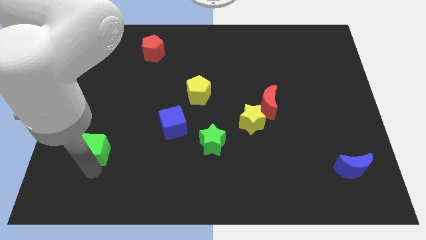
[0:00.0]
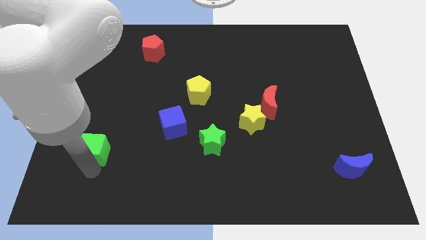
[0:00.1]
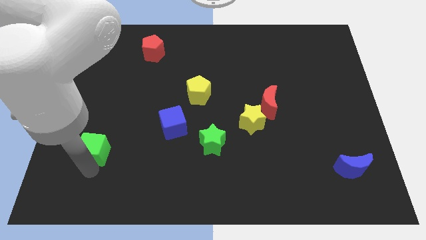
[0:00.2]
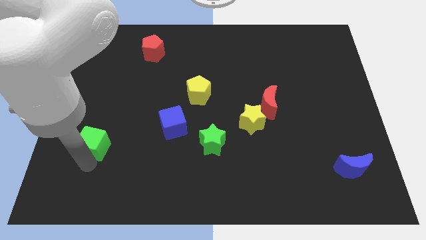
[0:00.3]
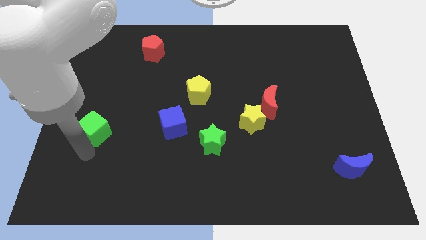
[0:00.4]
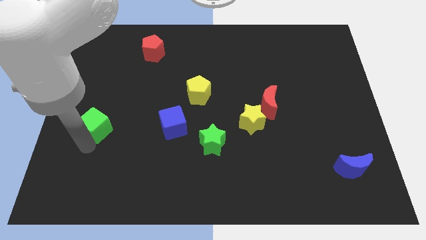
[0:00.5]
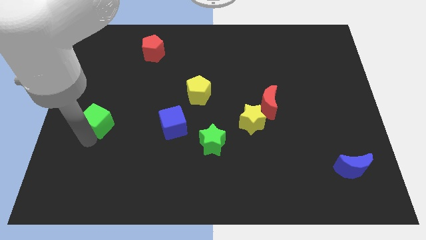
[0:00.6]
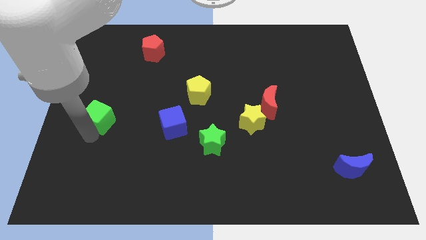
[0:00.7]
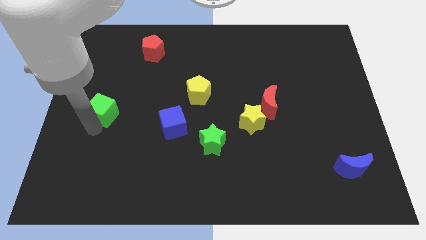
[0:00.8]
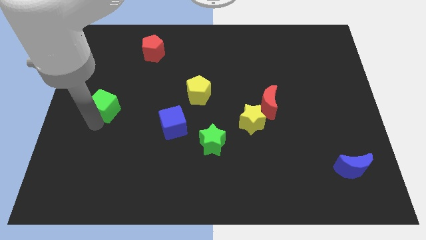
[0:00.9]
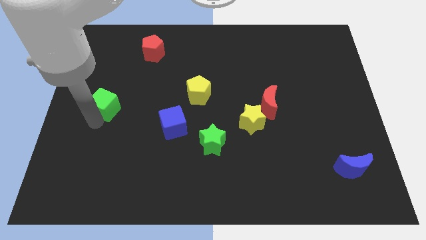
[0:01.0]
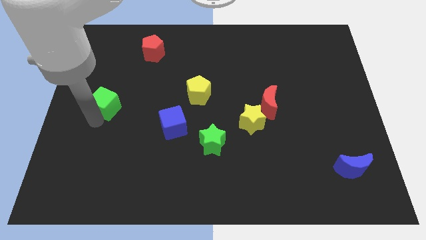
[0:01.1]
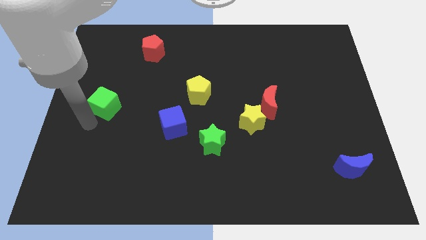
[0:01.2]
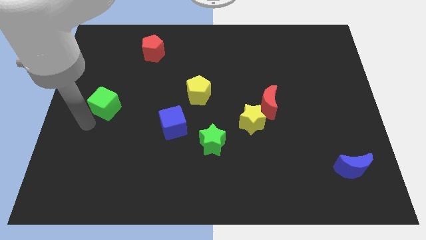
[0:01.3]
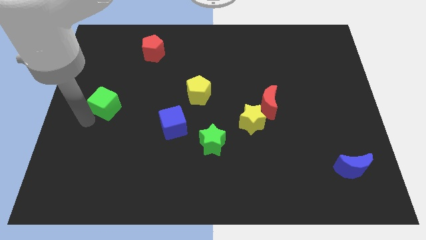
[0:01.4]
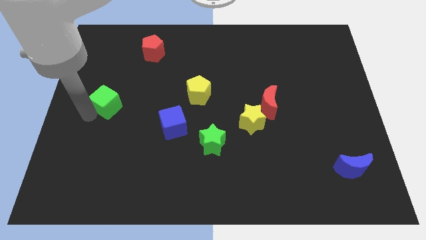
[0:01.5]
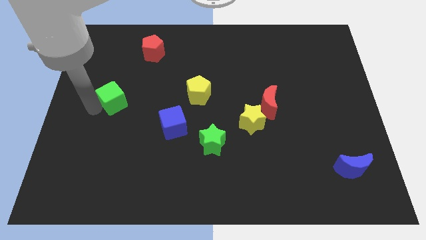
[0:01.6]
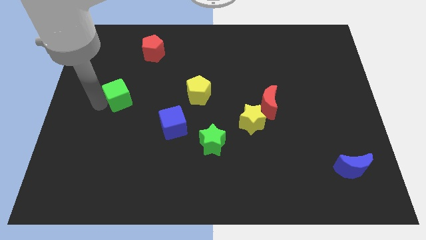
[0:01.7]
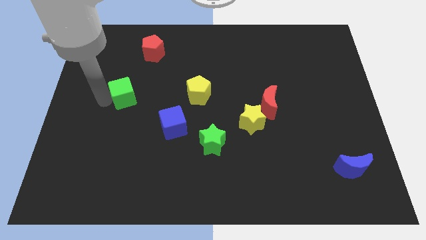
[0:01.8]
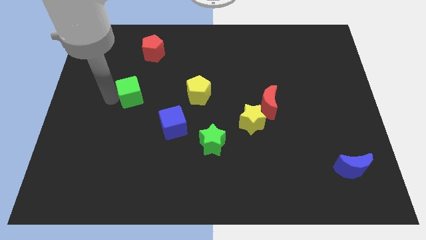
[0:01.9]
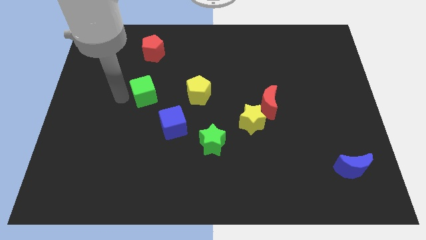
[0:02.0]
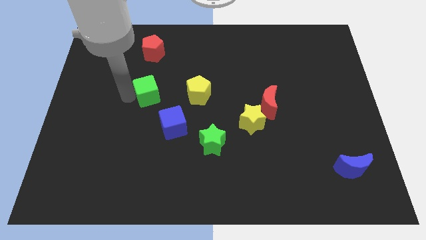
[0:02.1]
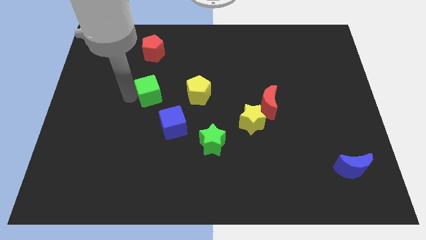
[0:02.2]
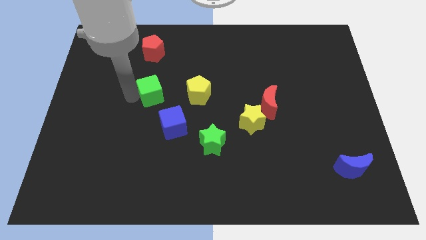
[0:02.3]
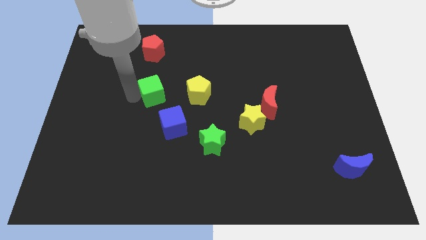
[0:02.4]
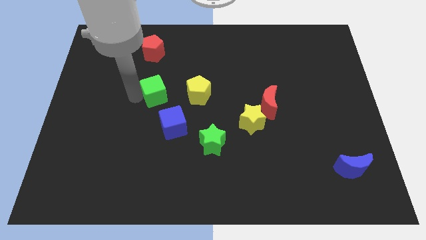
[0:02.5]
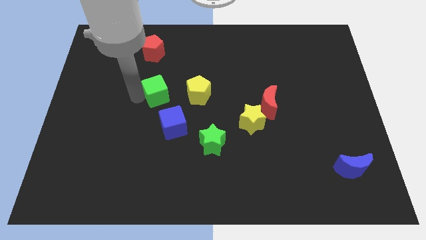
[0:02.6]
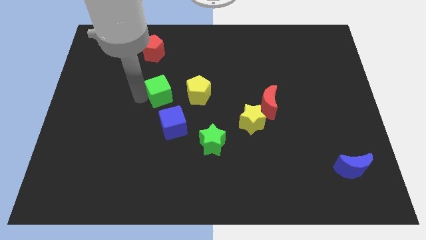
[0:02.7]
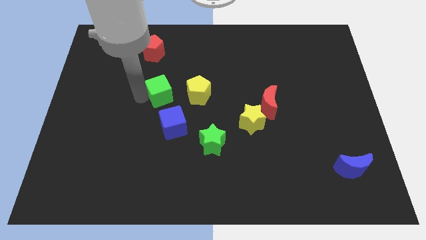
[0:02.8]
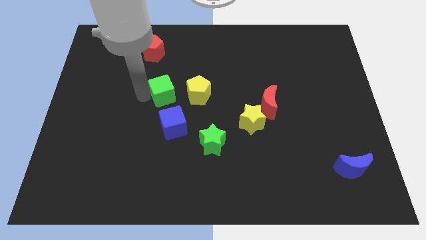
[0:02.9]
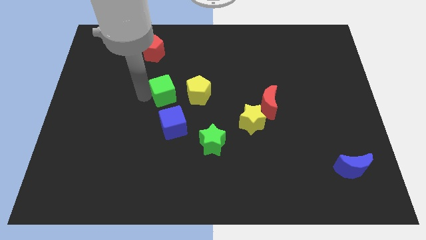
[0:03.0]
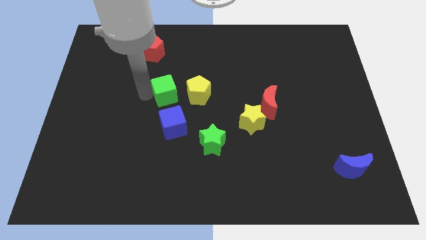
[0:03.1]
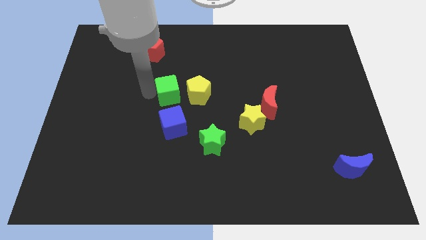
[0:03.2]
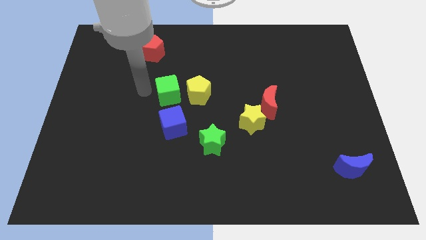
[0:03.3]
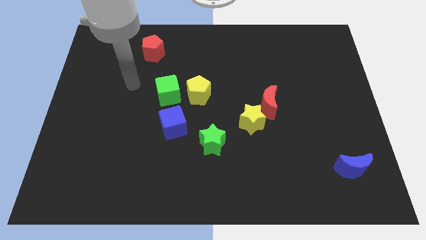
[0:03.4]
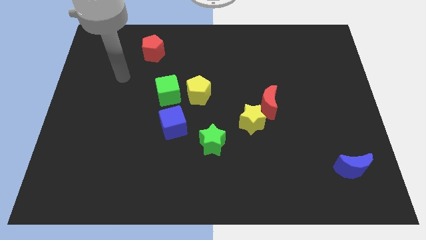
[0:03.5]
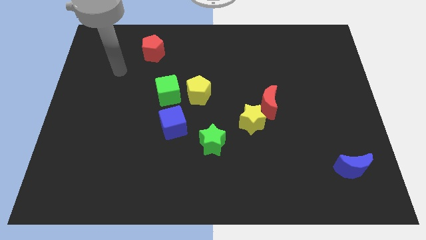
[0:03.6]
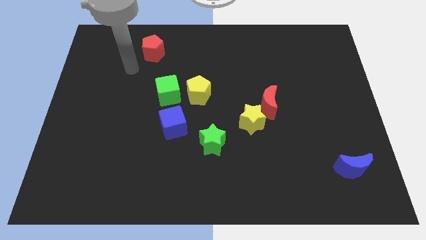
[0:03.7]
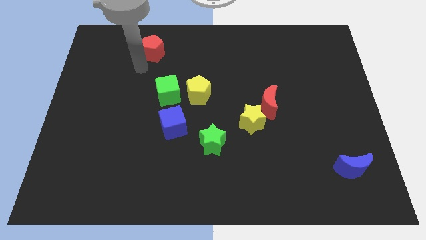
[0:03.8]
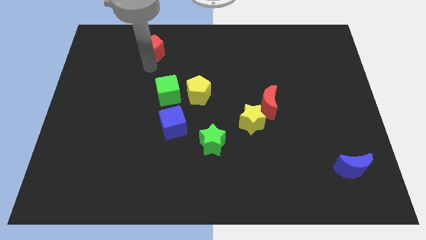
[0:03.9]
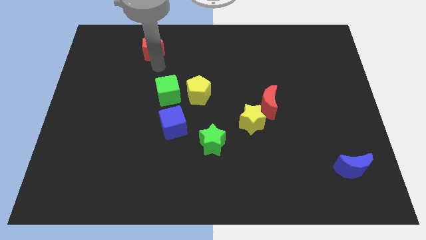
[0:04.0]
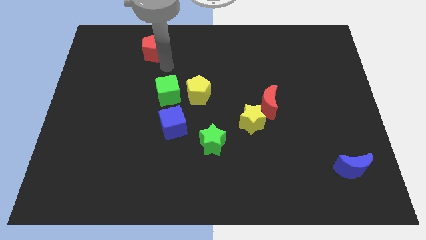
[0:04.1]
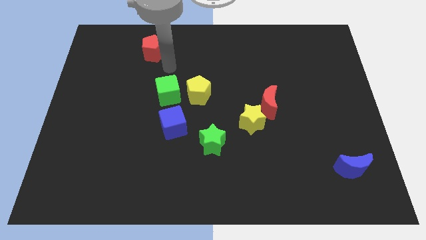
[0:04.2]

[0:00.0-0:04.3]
move the green cube left to the yellow pentagon

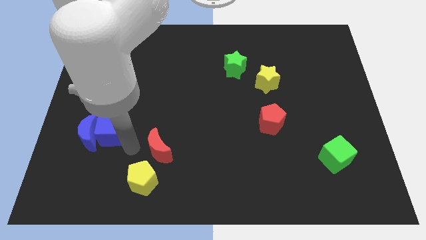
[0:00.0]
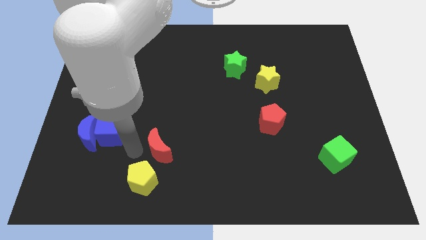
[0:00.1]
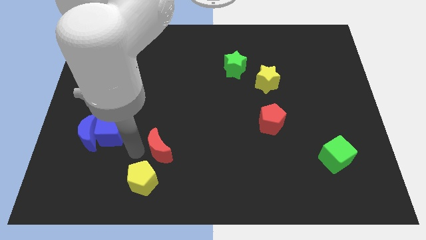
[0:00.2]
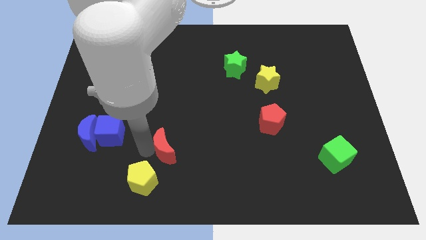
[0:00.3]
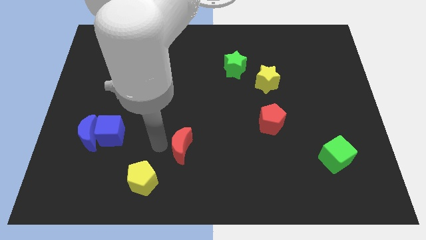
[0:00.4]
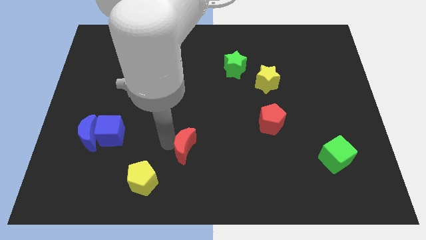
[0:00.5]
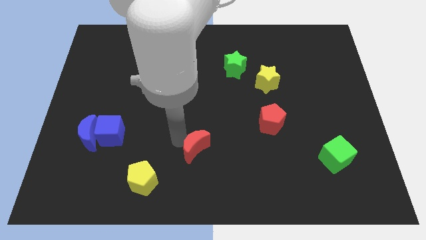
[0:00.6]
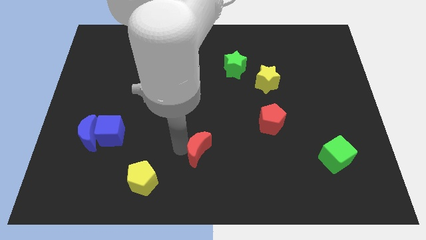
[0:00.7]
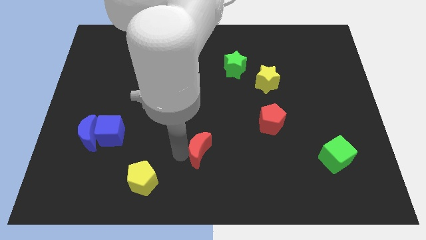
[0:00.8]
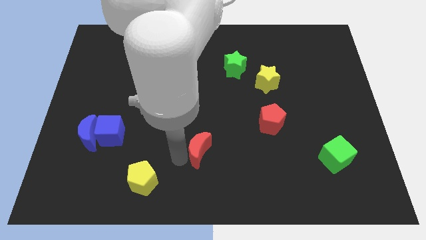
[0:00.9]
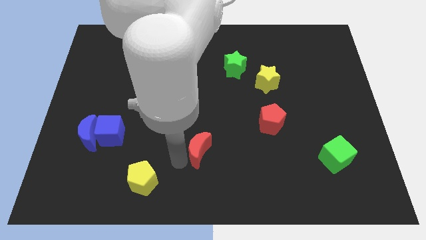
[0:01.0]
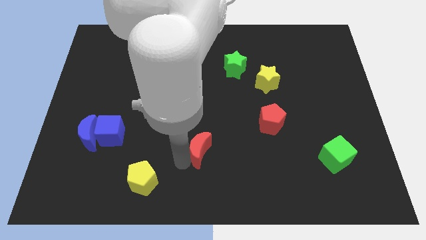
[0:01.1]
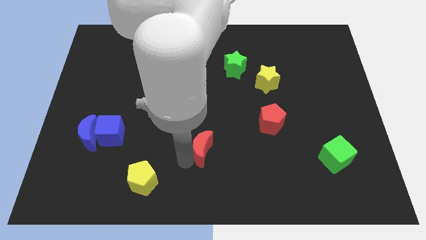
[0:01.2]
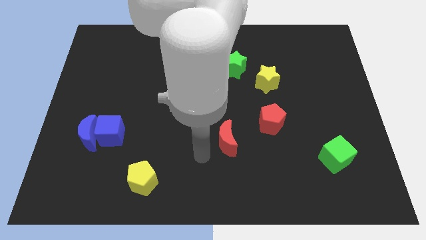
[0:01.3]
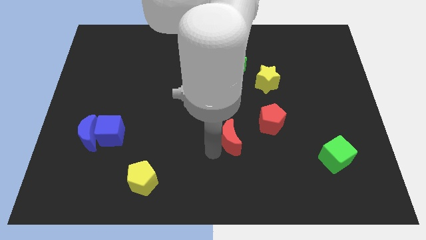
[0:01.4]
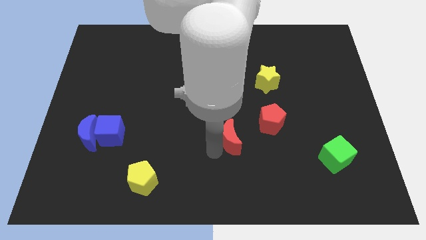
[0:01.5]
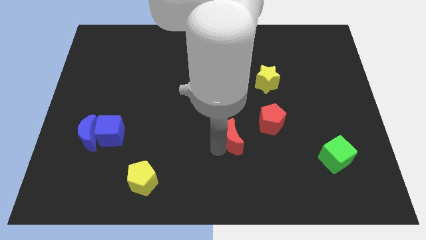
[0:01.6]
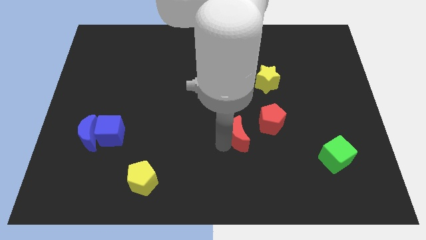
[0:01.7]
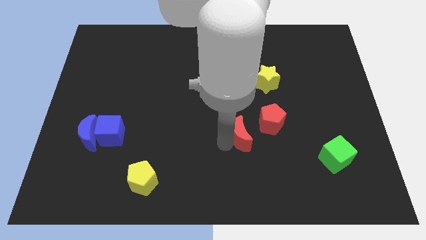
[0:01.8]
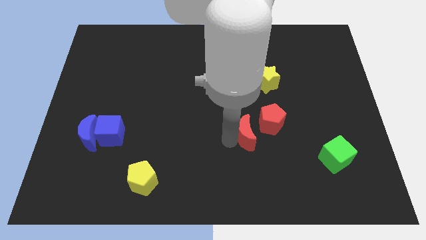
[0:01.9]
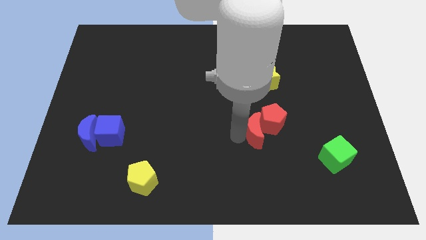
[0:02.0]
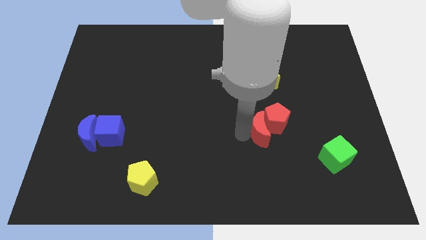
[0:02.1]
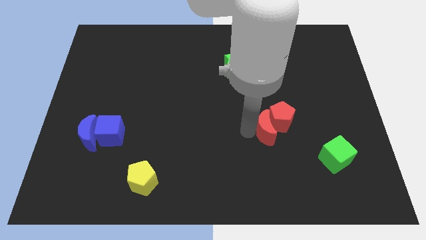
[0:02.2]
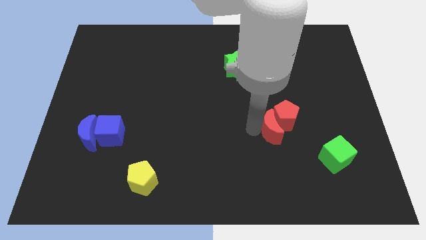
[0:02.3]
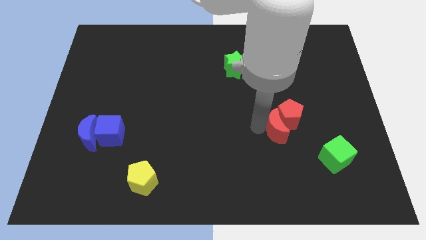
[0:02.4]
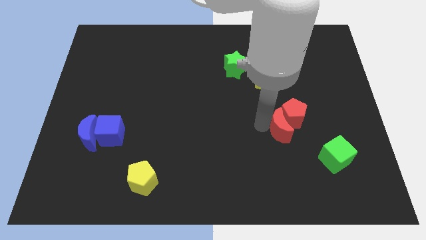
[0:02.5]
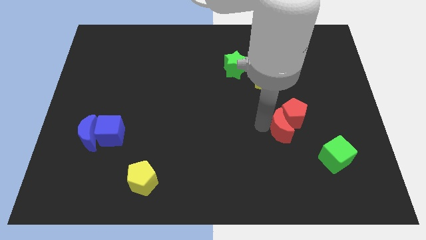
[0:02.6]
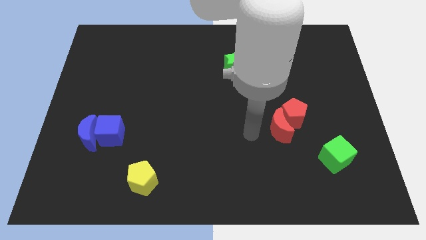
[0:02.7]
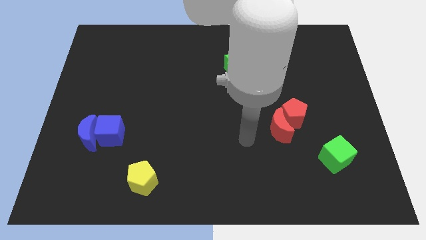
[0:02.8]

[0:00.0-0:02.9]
move the red crescent into the red pentagon

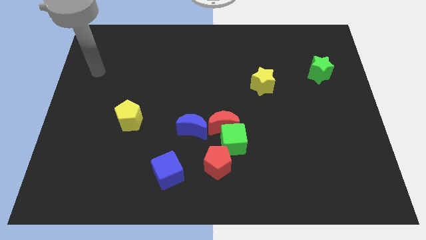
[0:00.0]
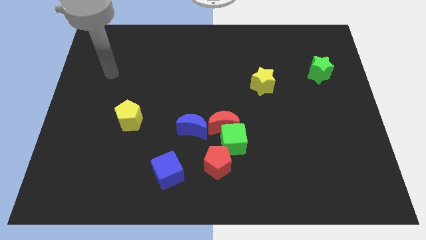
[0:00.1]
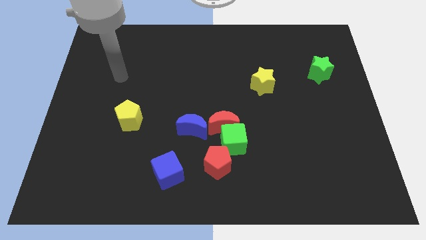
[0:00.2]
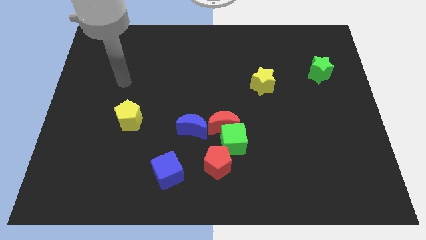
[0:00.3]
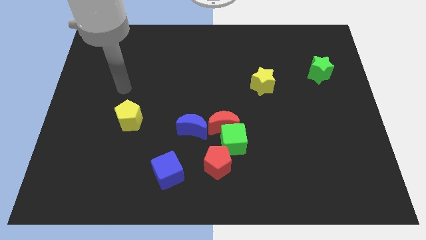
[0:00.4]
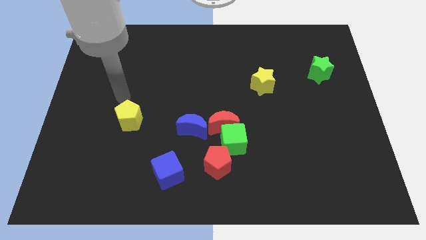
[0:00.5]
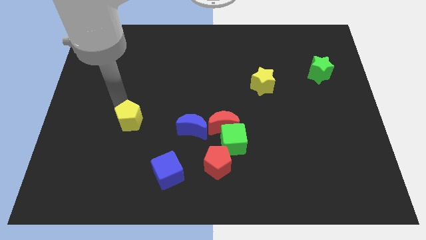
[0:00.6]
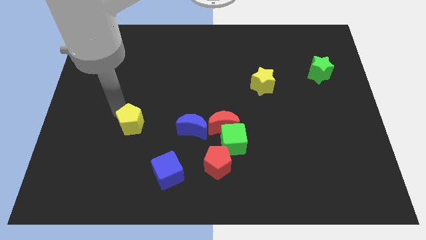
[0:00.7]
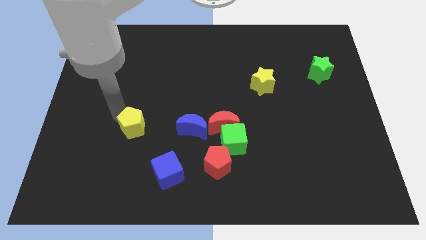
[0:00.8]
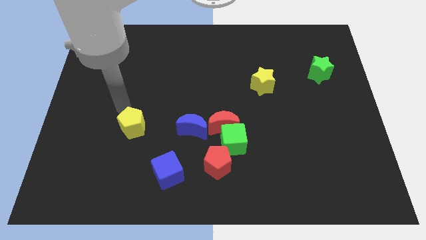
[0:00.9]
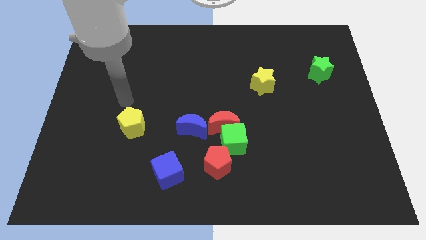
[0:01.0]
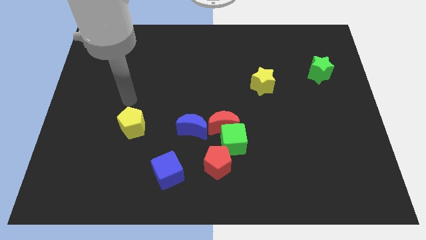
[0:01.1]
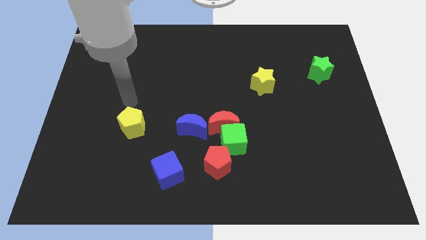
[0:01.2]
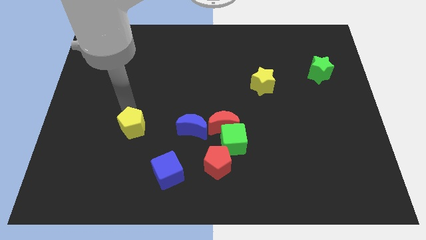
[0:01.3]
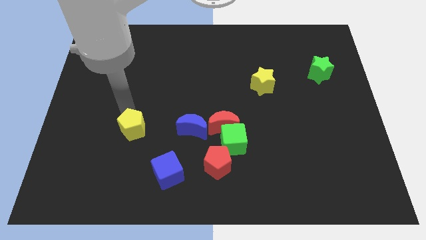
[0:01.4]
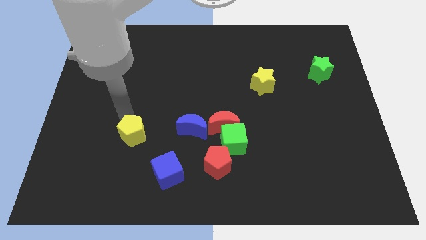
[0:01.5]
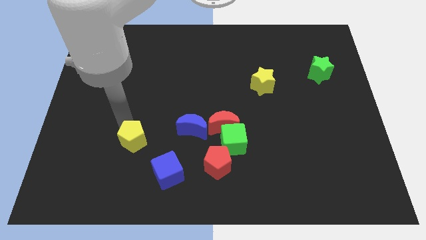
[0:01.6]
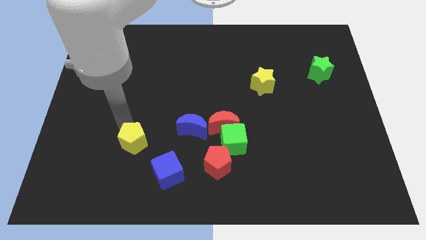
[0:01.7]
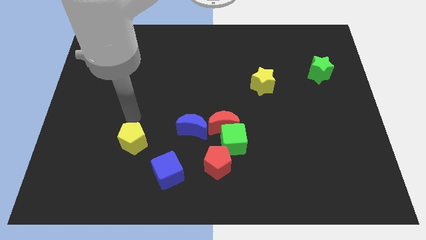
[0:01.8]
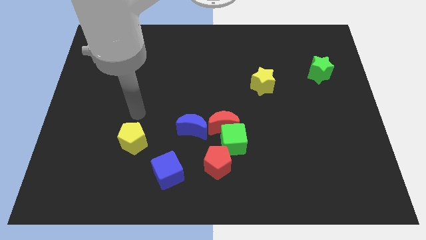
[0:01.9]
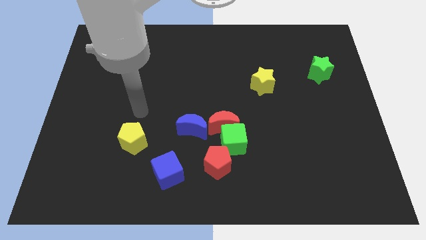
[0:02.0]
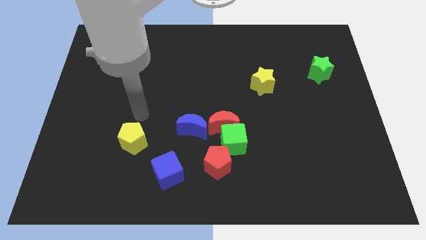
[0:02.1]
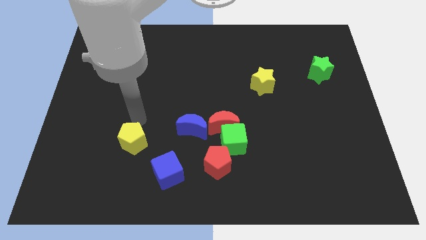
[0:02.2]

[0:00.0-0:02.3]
push the yellow pentagon slightly down
